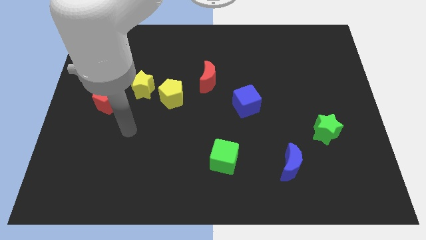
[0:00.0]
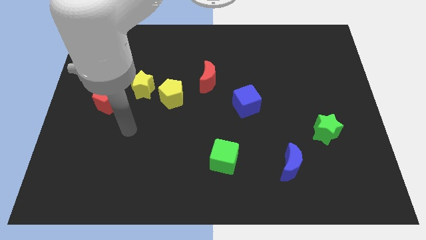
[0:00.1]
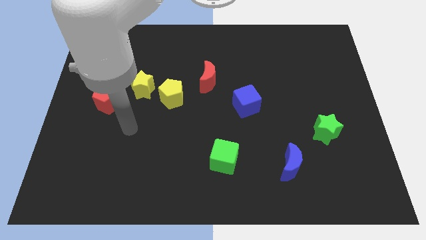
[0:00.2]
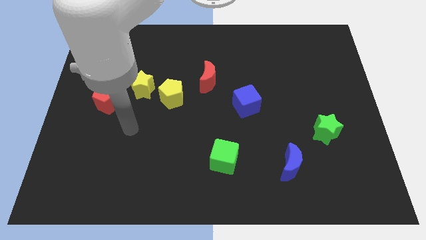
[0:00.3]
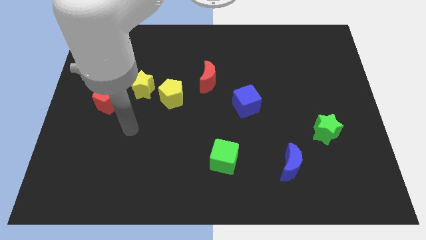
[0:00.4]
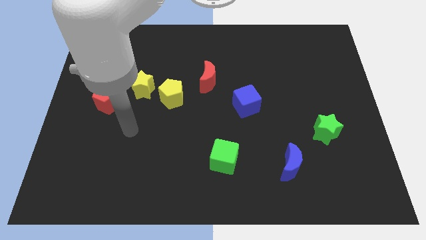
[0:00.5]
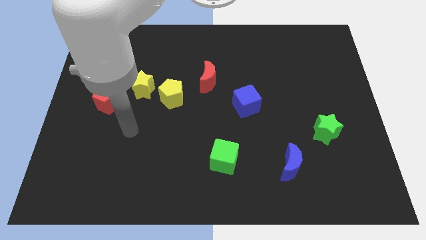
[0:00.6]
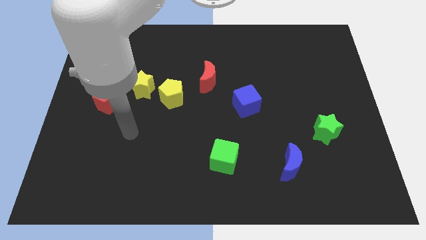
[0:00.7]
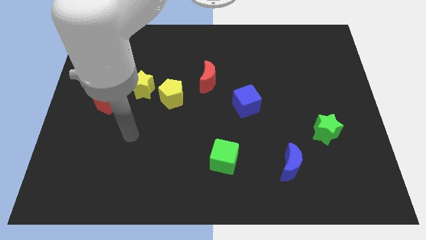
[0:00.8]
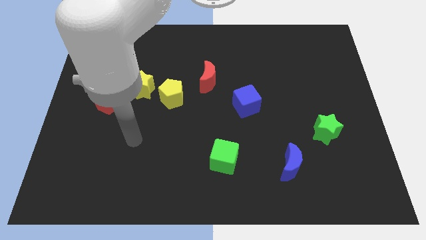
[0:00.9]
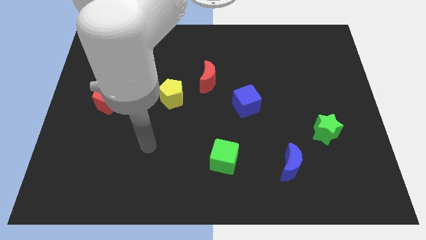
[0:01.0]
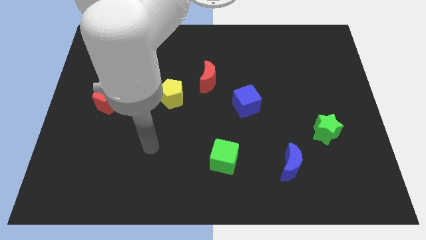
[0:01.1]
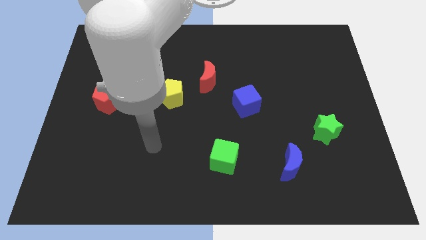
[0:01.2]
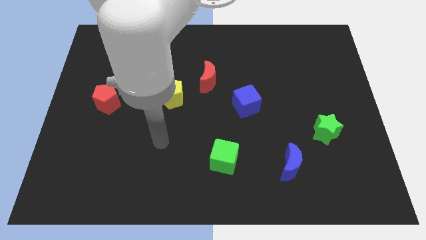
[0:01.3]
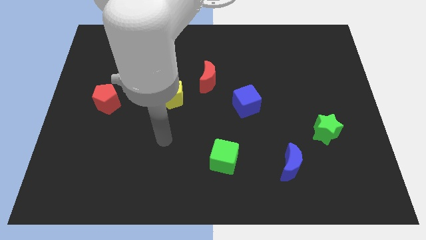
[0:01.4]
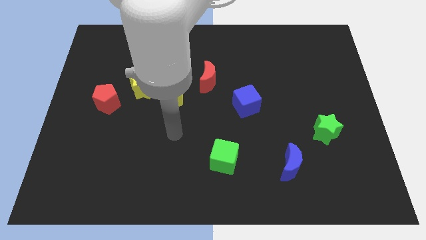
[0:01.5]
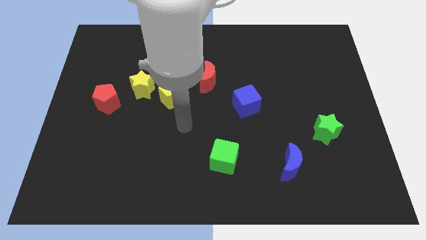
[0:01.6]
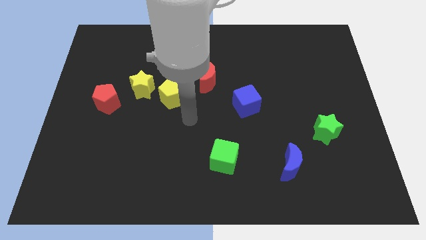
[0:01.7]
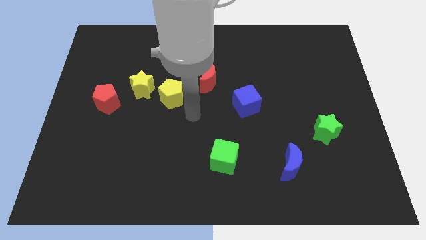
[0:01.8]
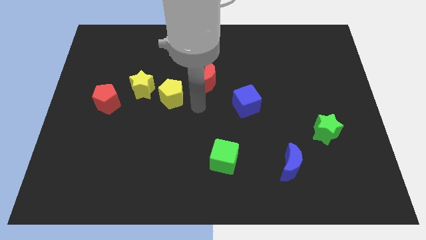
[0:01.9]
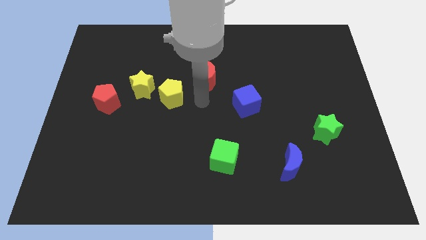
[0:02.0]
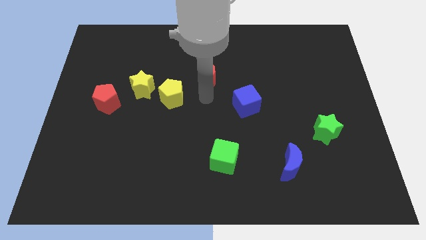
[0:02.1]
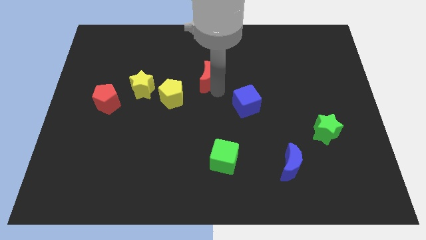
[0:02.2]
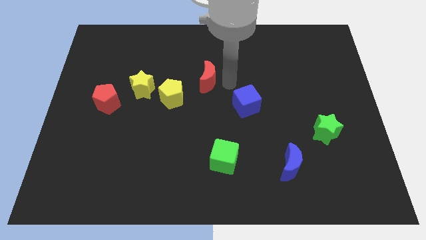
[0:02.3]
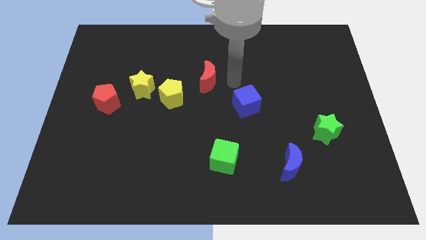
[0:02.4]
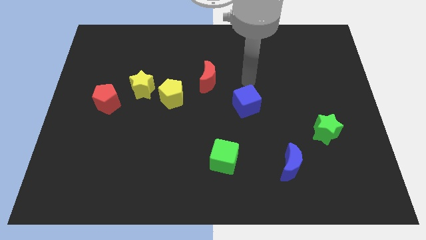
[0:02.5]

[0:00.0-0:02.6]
move the arm towards the blue cube

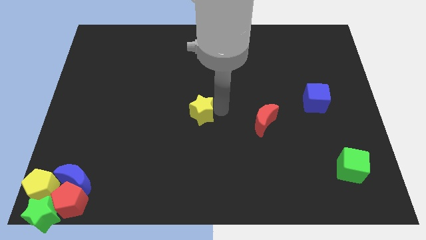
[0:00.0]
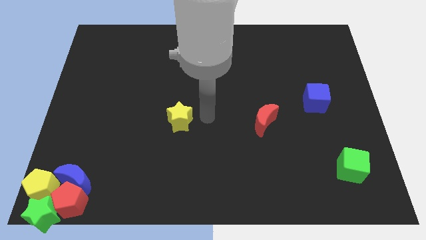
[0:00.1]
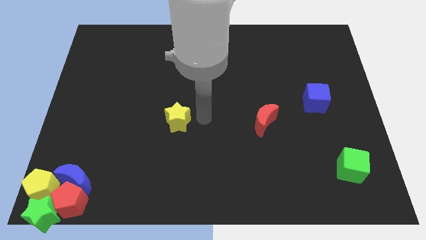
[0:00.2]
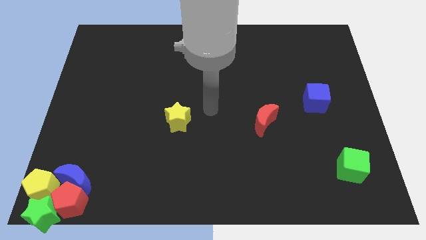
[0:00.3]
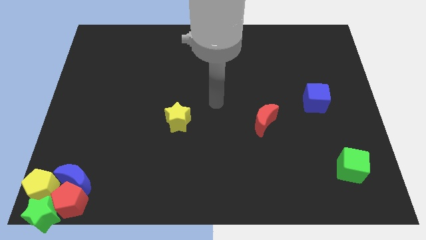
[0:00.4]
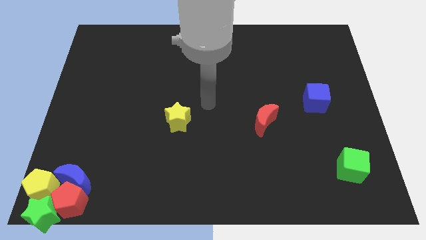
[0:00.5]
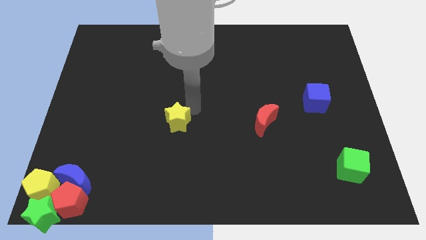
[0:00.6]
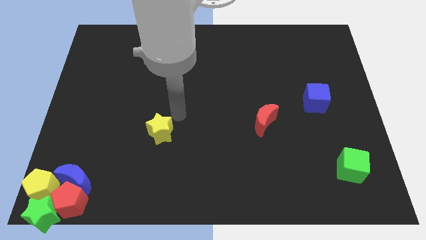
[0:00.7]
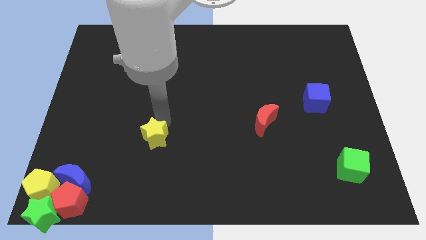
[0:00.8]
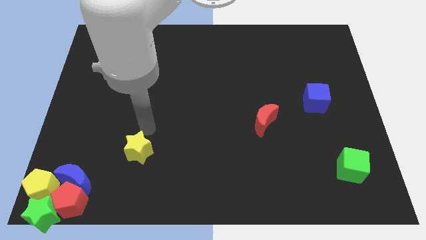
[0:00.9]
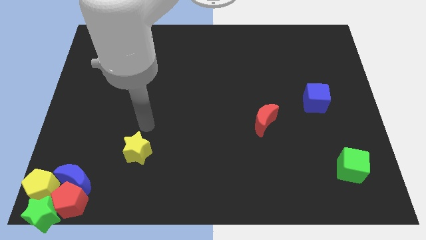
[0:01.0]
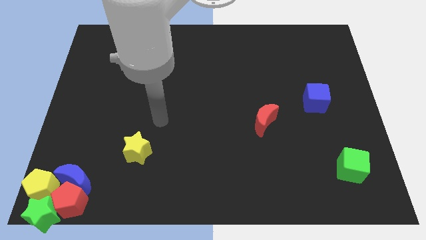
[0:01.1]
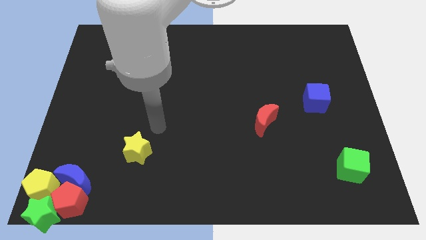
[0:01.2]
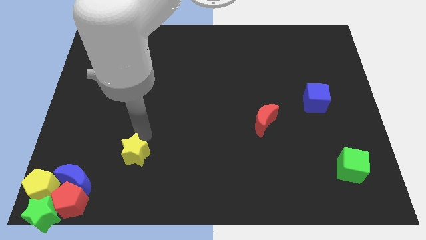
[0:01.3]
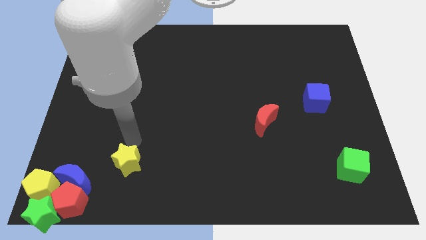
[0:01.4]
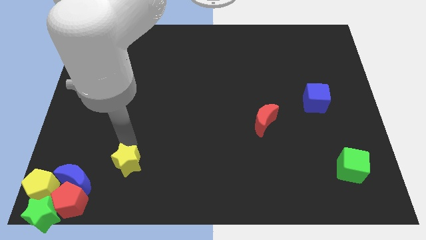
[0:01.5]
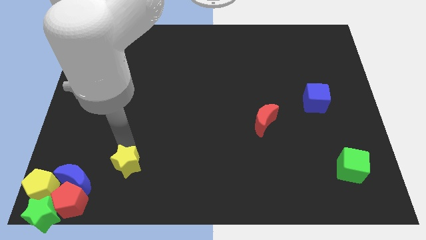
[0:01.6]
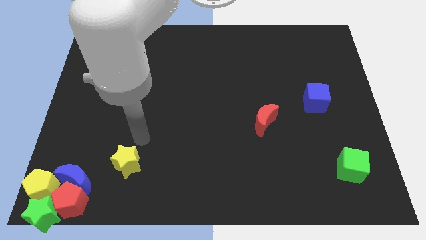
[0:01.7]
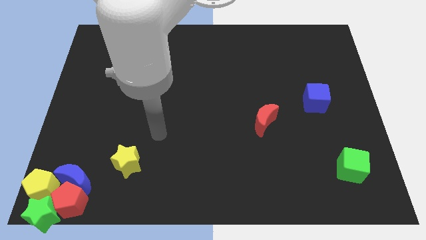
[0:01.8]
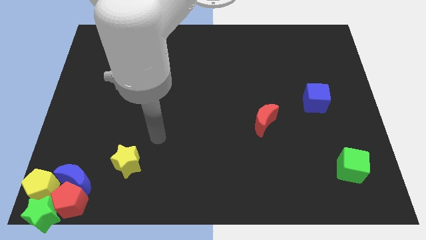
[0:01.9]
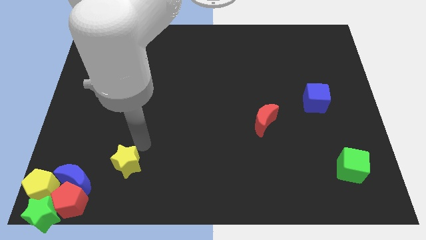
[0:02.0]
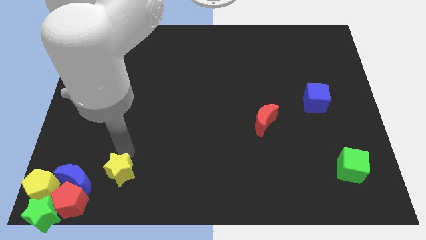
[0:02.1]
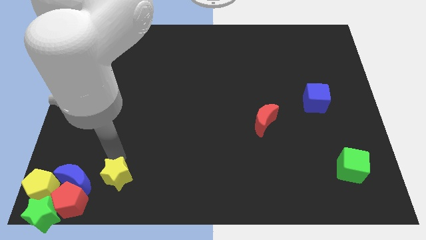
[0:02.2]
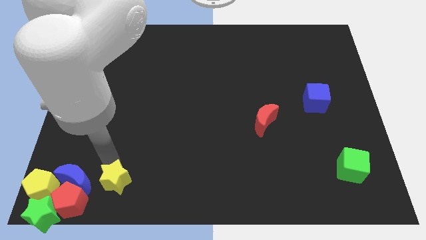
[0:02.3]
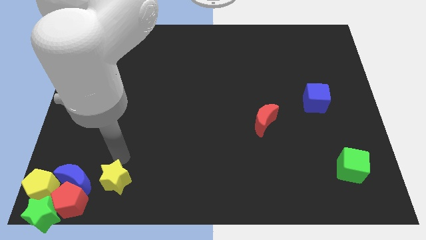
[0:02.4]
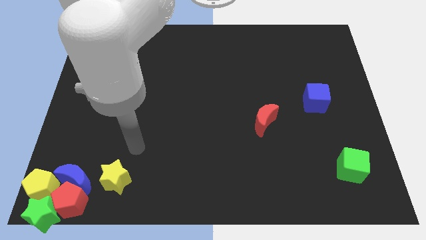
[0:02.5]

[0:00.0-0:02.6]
put the yellow star diagonally top right to red pentagon

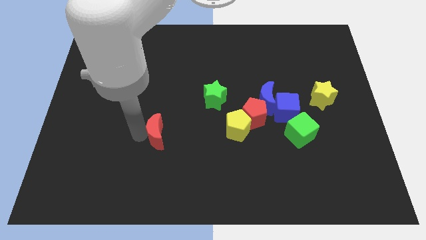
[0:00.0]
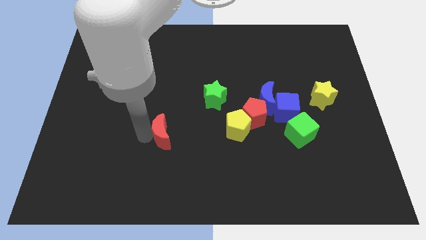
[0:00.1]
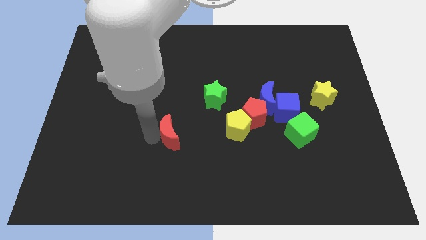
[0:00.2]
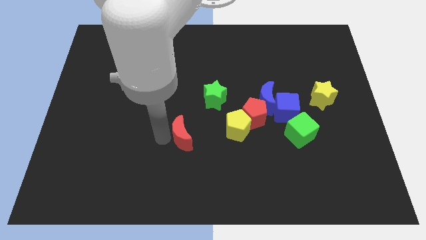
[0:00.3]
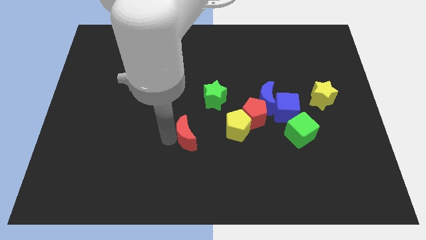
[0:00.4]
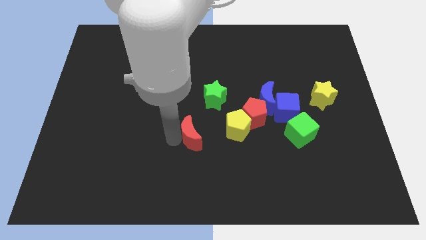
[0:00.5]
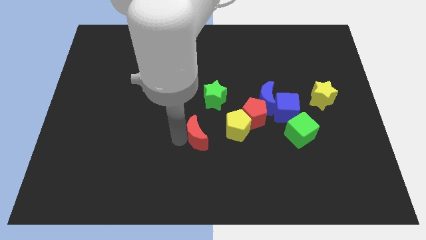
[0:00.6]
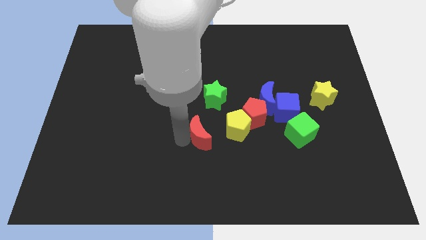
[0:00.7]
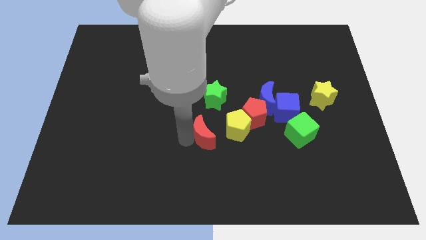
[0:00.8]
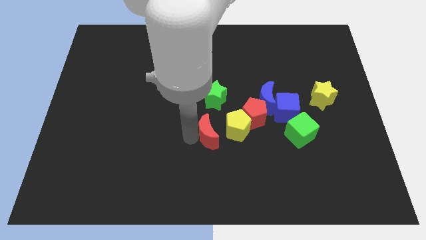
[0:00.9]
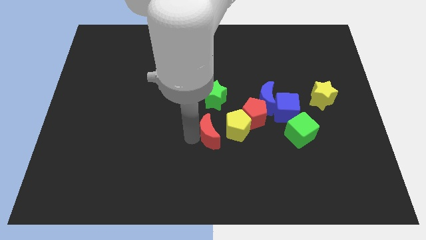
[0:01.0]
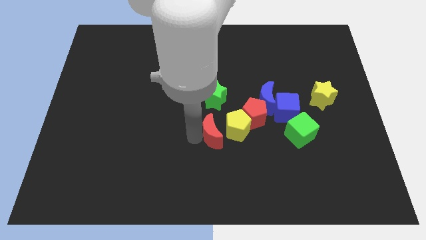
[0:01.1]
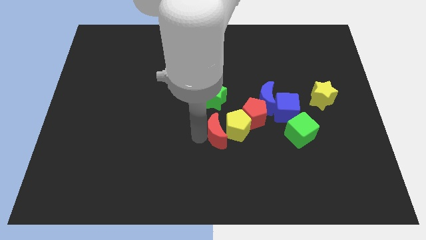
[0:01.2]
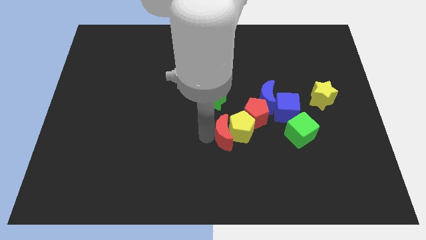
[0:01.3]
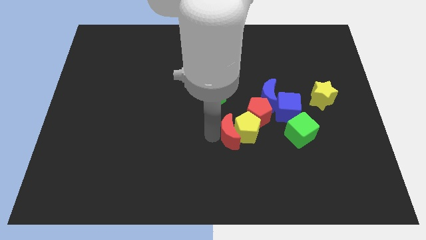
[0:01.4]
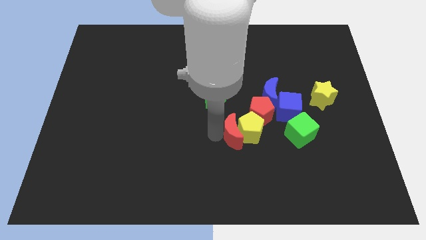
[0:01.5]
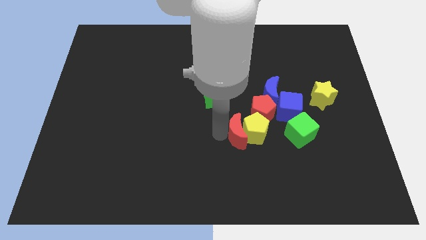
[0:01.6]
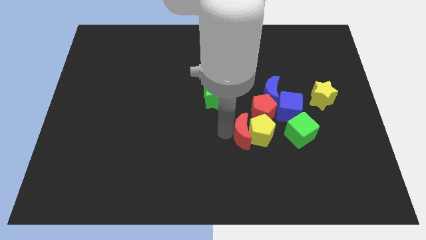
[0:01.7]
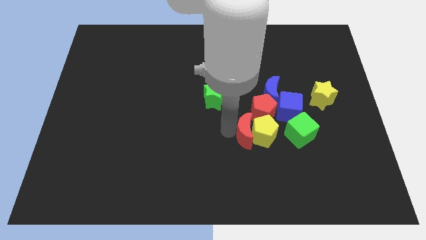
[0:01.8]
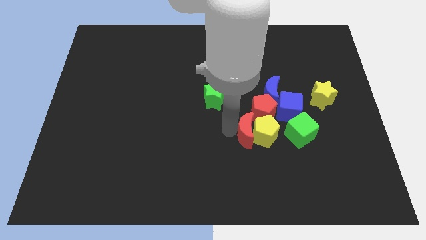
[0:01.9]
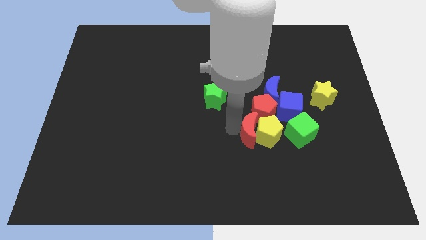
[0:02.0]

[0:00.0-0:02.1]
place red crescent to the left of yellow pentagon

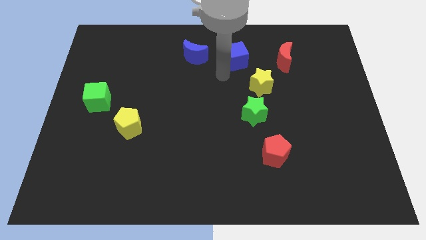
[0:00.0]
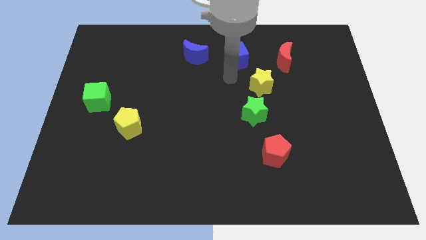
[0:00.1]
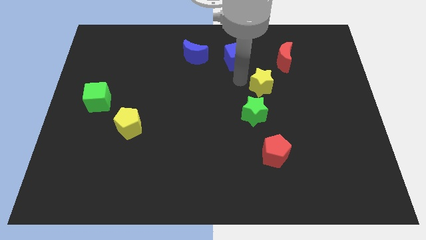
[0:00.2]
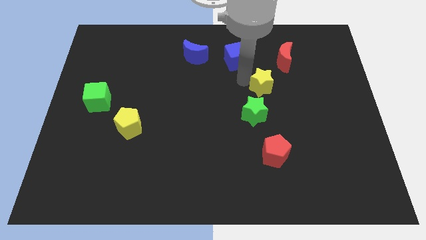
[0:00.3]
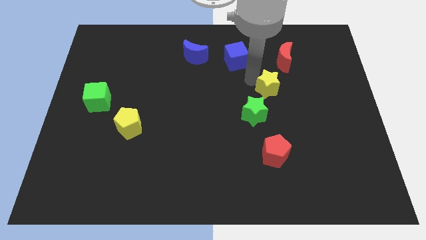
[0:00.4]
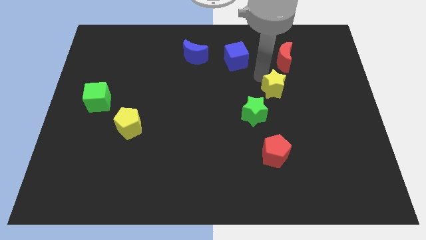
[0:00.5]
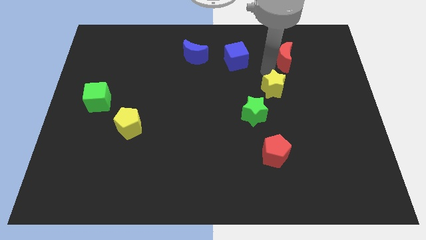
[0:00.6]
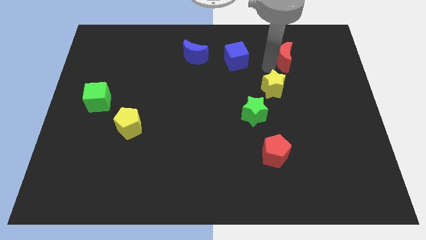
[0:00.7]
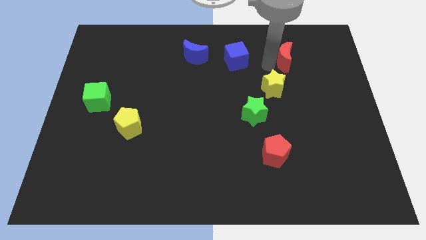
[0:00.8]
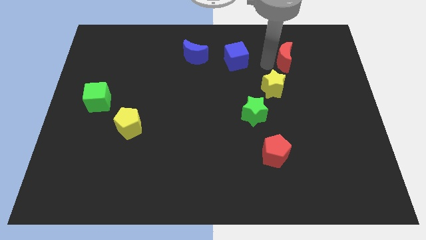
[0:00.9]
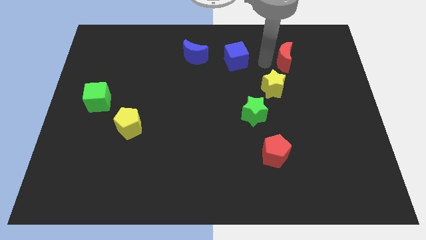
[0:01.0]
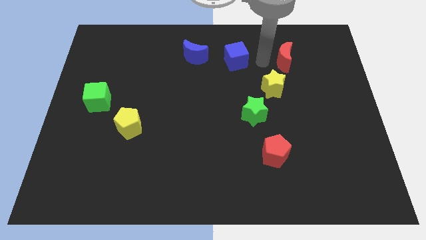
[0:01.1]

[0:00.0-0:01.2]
place yellow star between red crescent and green star

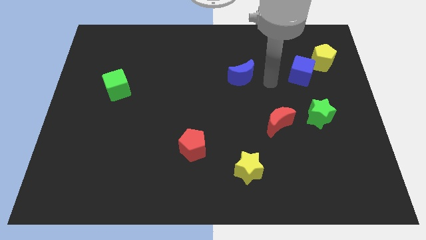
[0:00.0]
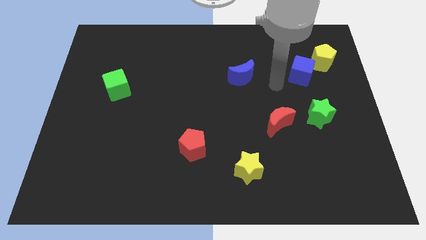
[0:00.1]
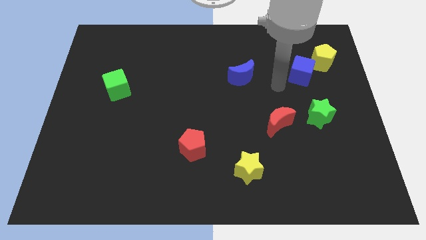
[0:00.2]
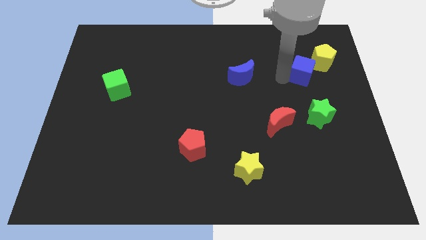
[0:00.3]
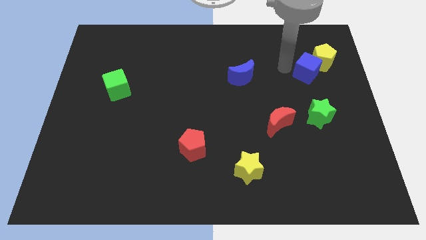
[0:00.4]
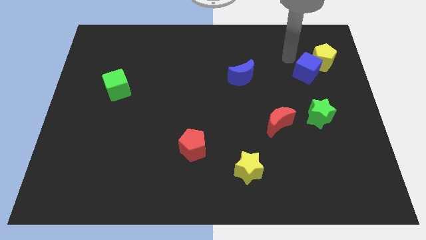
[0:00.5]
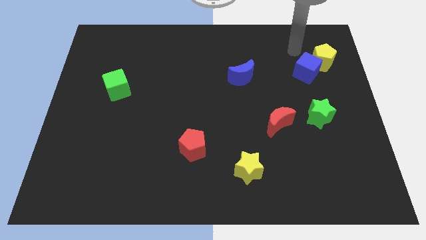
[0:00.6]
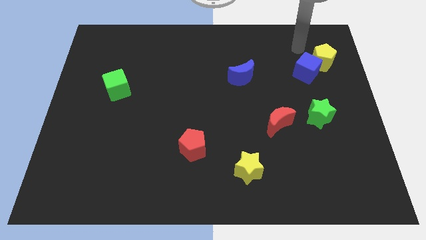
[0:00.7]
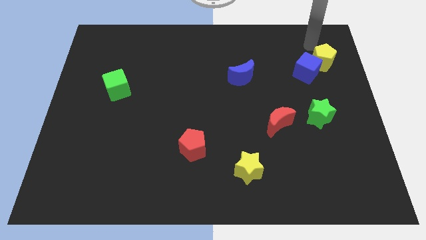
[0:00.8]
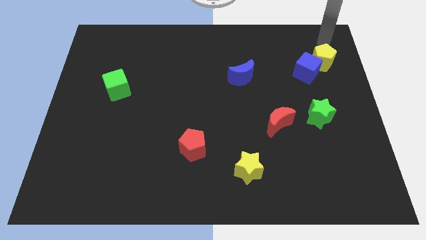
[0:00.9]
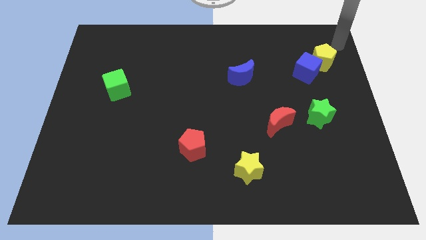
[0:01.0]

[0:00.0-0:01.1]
slide the blue cube close to the yellow pentagon
